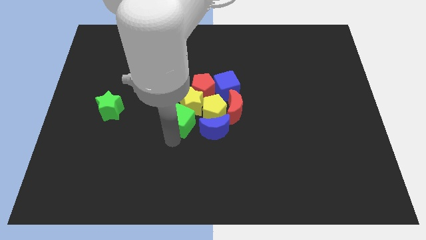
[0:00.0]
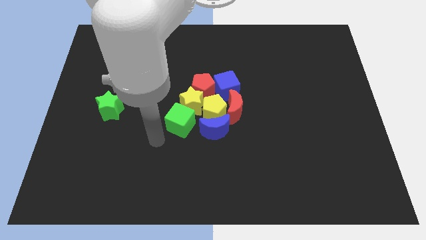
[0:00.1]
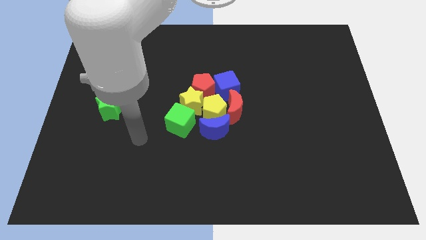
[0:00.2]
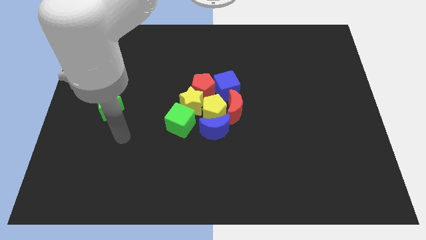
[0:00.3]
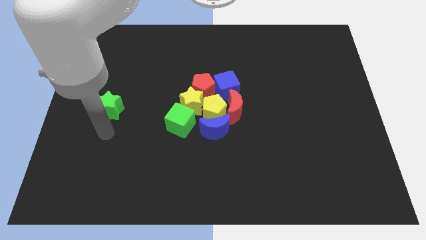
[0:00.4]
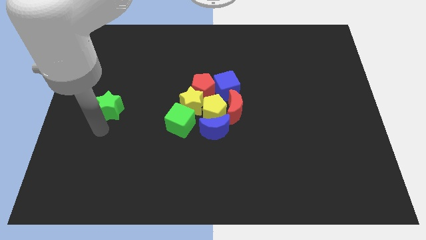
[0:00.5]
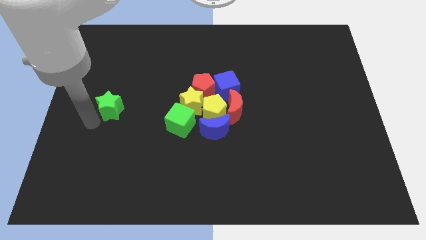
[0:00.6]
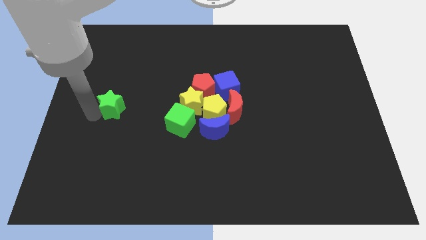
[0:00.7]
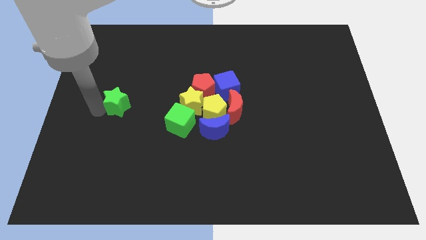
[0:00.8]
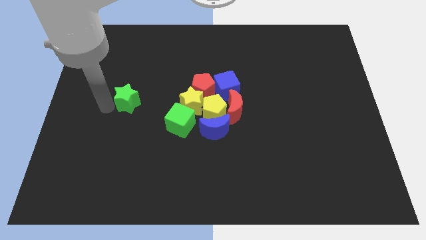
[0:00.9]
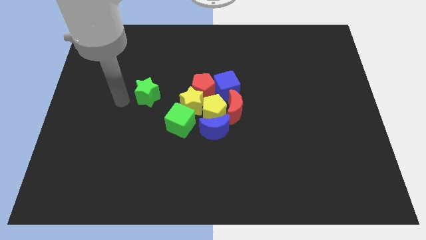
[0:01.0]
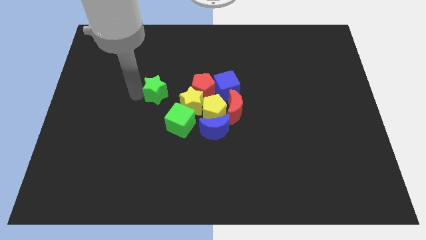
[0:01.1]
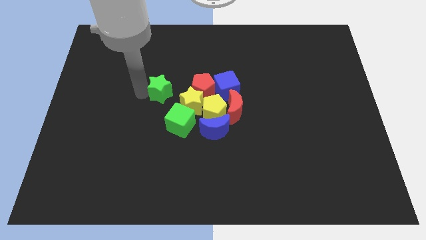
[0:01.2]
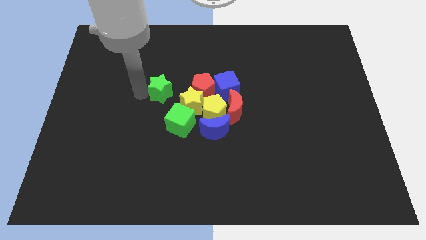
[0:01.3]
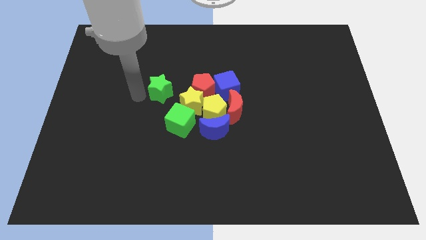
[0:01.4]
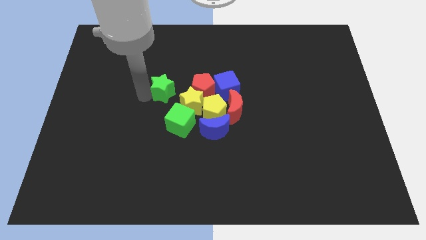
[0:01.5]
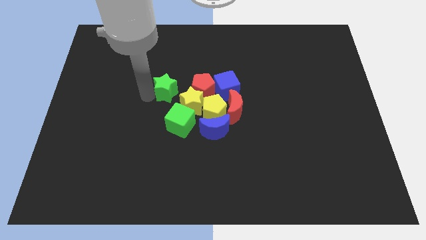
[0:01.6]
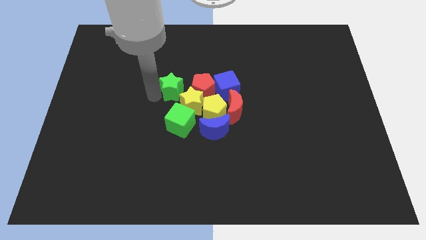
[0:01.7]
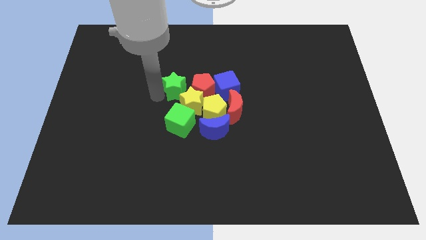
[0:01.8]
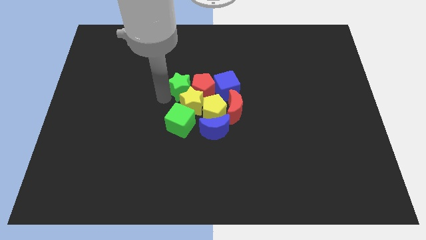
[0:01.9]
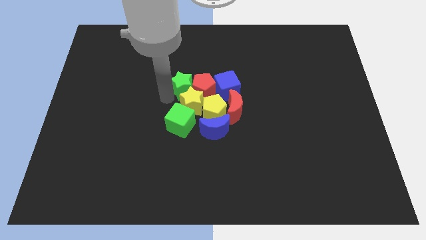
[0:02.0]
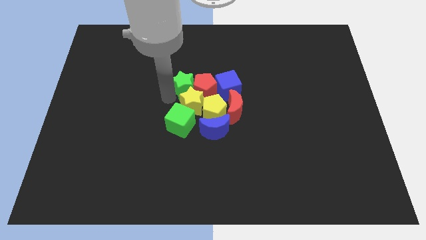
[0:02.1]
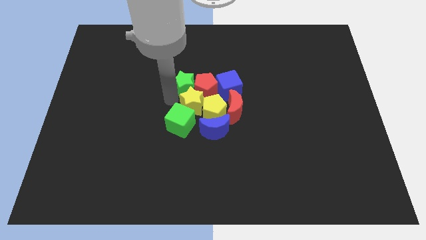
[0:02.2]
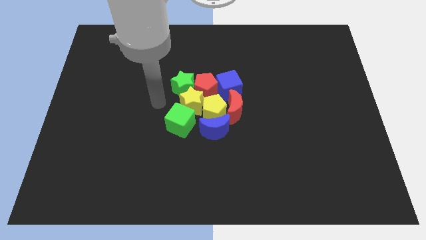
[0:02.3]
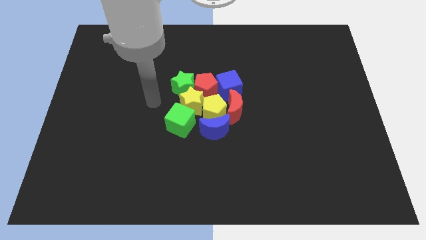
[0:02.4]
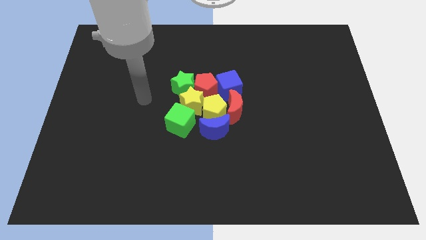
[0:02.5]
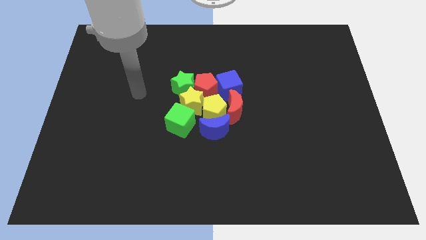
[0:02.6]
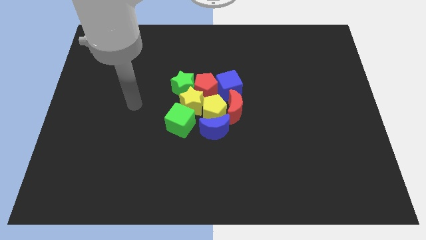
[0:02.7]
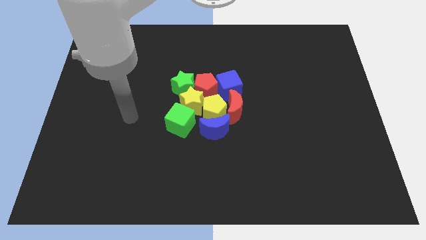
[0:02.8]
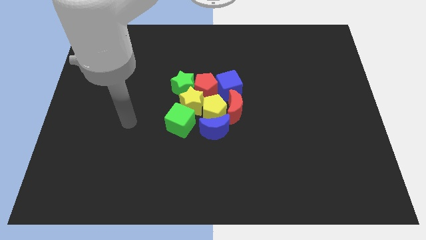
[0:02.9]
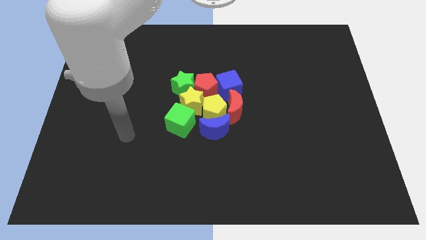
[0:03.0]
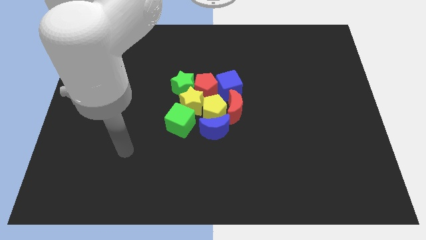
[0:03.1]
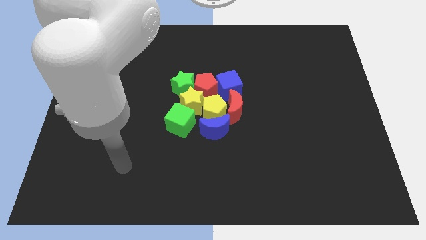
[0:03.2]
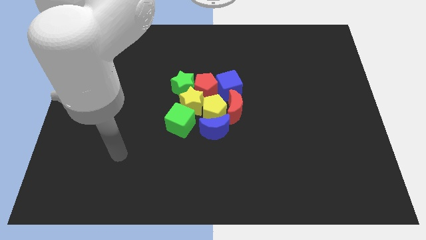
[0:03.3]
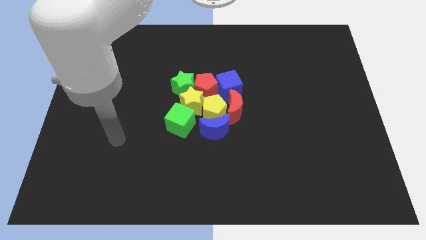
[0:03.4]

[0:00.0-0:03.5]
place the green star left to the red pentagon

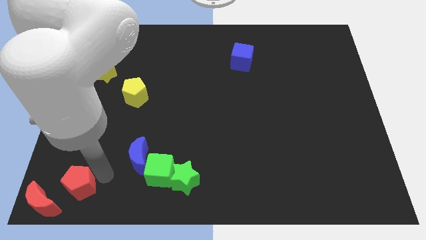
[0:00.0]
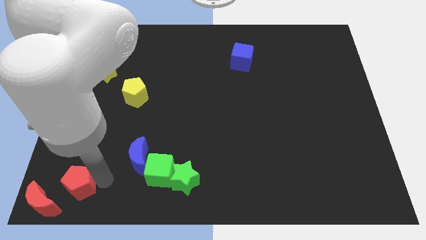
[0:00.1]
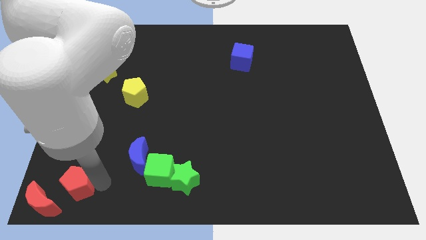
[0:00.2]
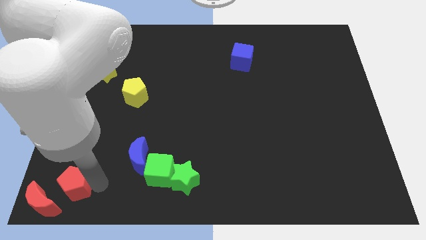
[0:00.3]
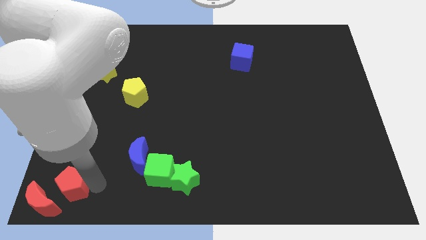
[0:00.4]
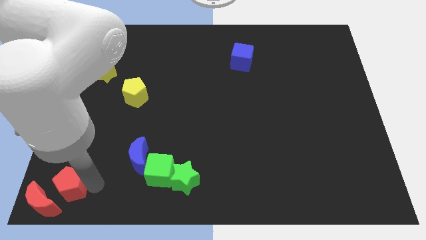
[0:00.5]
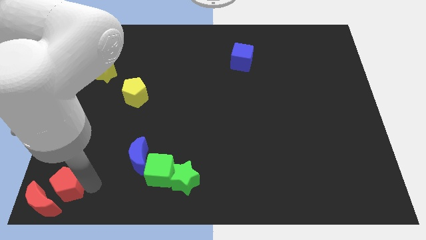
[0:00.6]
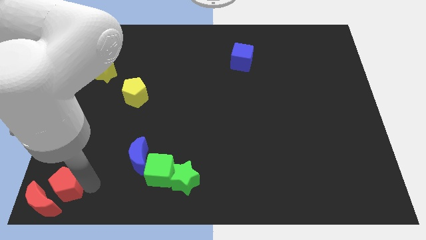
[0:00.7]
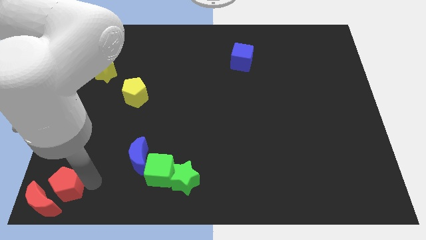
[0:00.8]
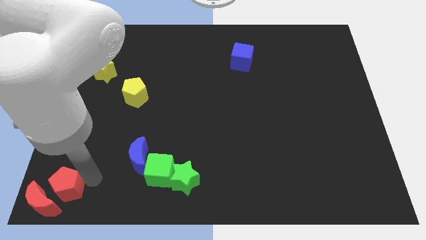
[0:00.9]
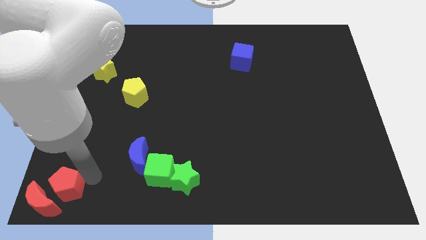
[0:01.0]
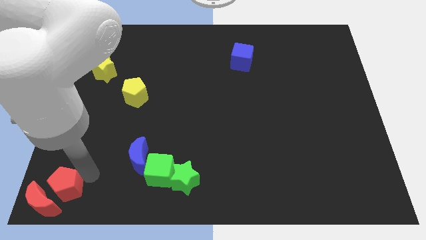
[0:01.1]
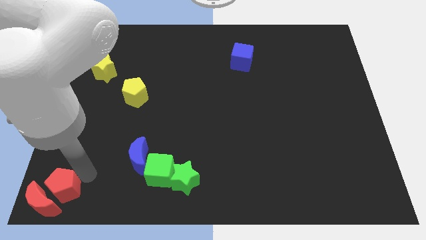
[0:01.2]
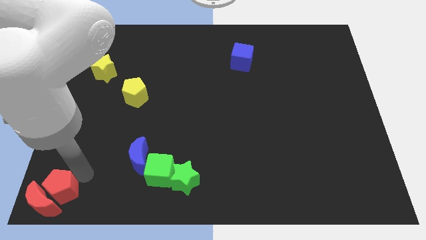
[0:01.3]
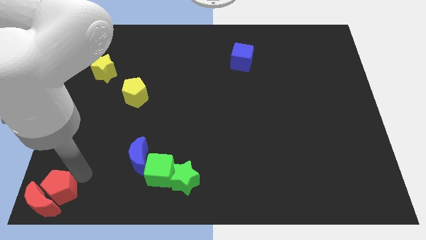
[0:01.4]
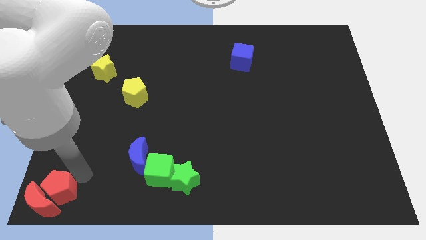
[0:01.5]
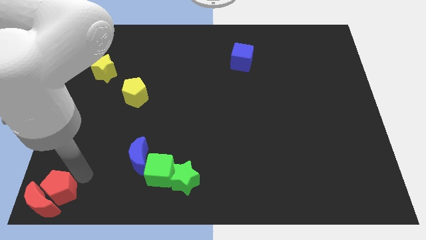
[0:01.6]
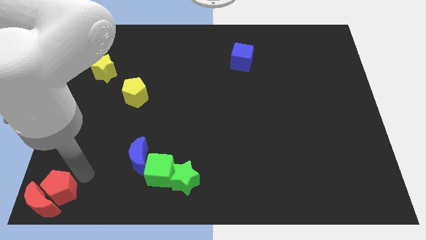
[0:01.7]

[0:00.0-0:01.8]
slide the red pentagon into red moon

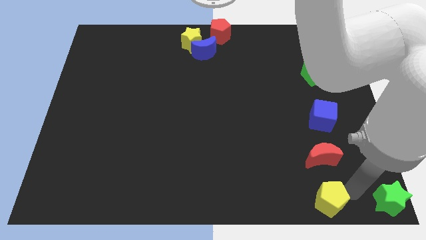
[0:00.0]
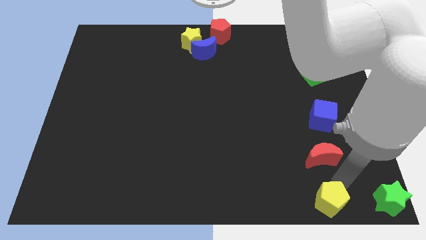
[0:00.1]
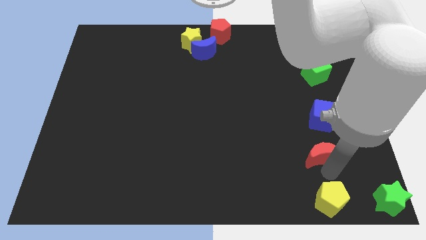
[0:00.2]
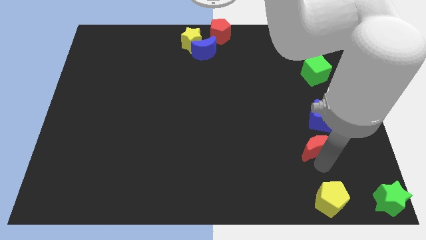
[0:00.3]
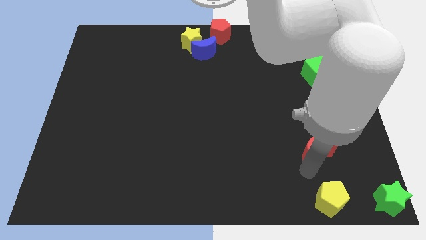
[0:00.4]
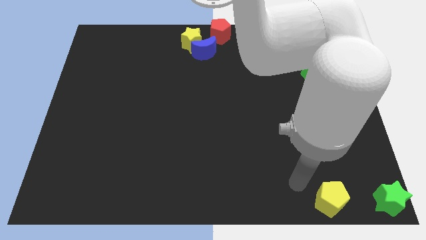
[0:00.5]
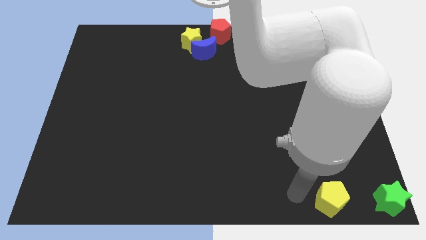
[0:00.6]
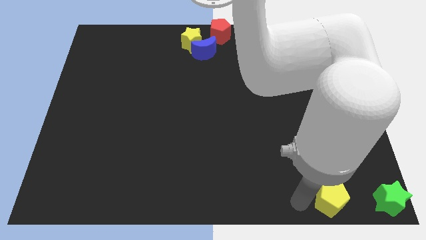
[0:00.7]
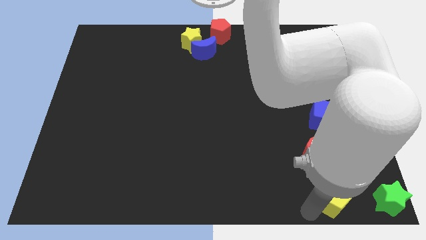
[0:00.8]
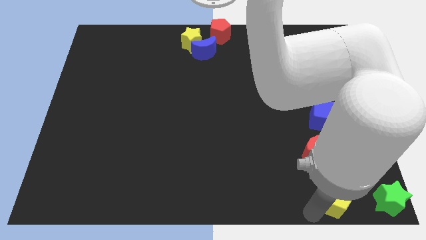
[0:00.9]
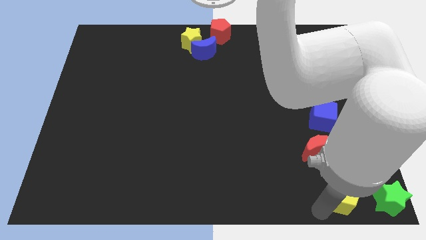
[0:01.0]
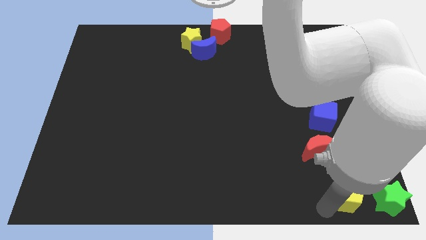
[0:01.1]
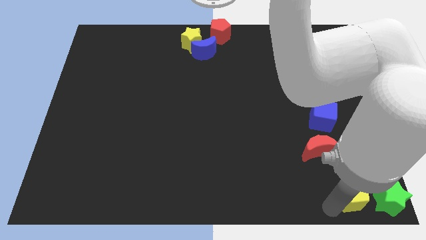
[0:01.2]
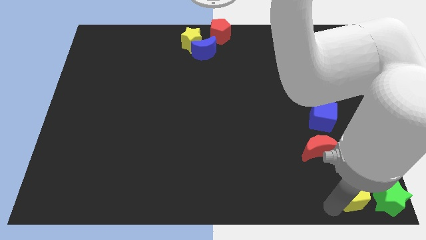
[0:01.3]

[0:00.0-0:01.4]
slightly move the yellow pentagon towards the right

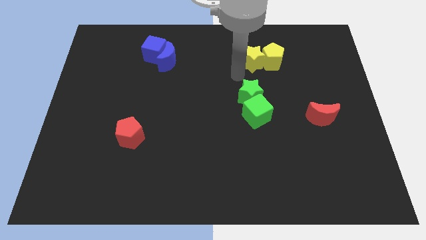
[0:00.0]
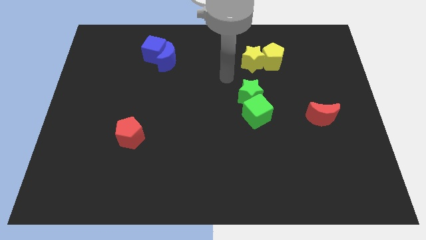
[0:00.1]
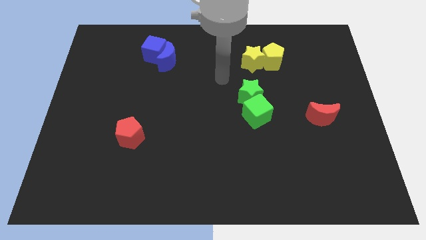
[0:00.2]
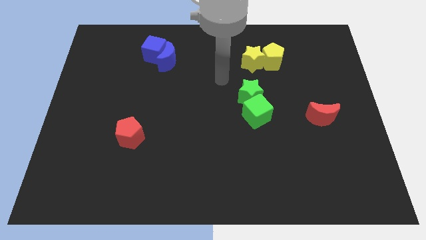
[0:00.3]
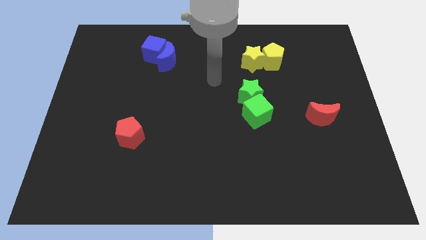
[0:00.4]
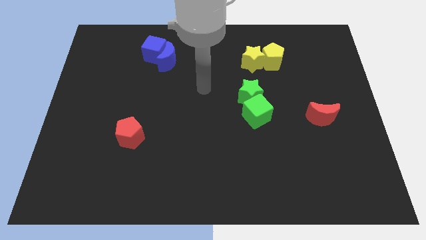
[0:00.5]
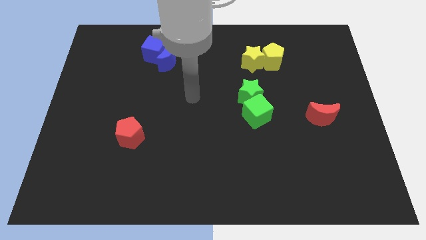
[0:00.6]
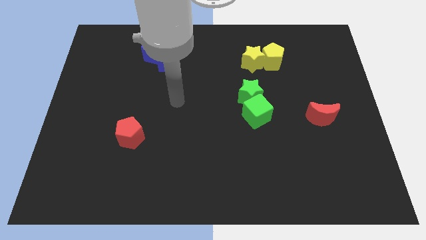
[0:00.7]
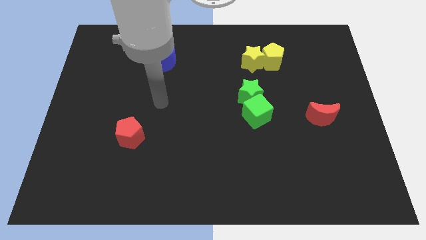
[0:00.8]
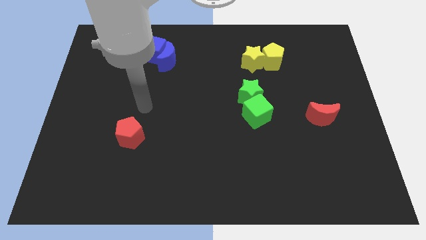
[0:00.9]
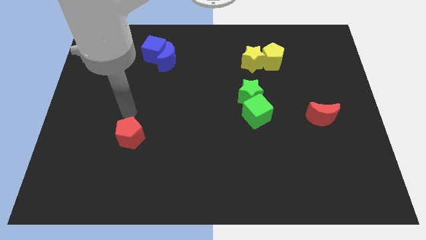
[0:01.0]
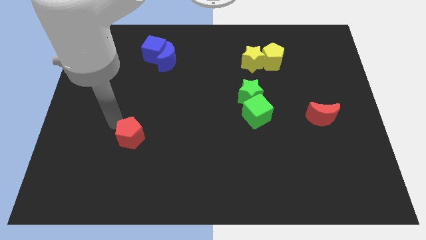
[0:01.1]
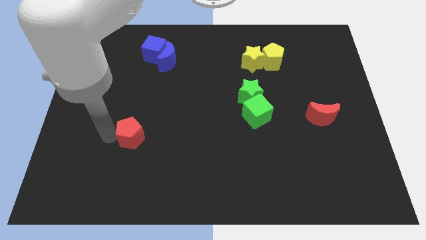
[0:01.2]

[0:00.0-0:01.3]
point your arm at the left side of the red pentagon

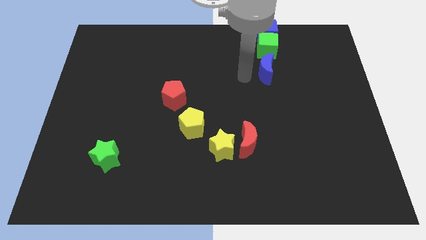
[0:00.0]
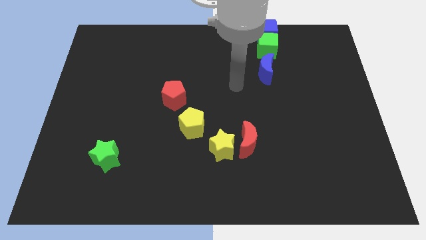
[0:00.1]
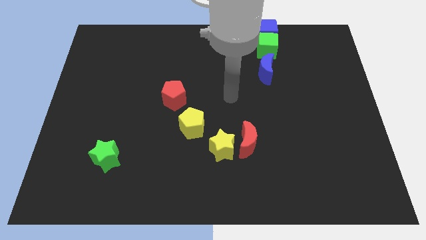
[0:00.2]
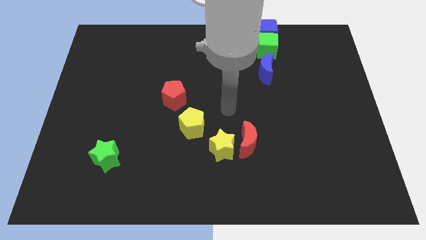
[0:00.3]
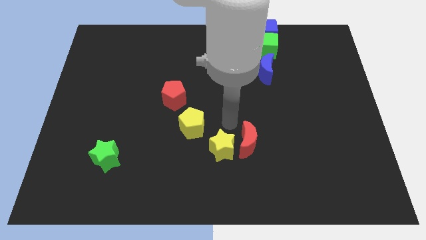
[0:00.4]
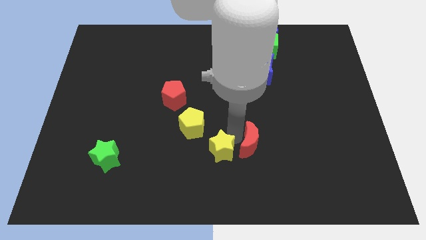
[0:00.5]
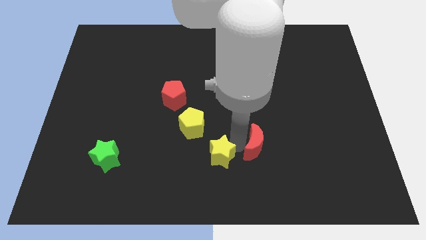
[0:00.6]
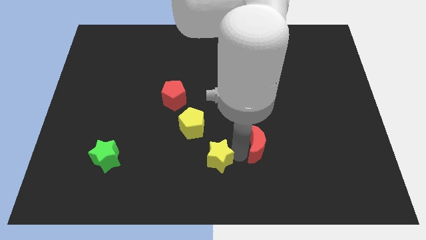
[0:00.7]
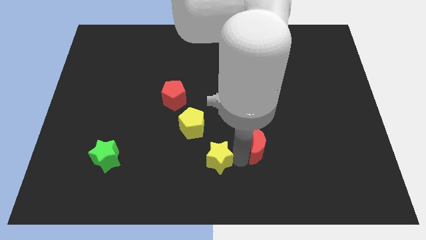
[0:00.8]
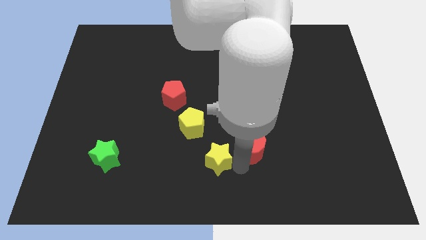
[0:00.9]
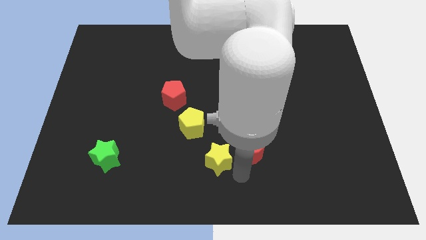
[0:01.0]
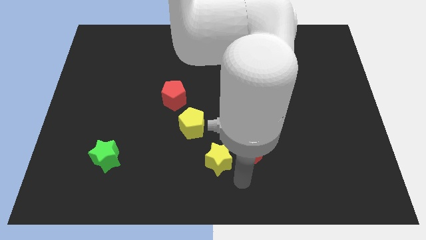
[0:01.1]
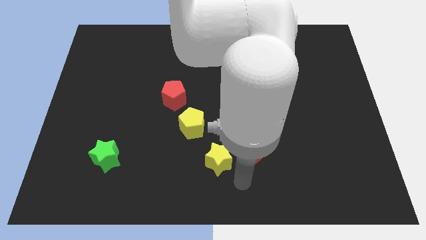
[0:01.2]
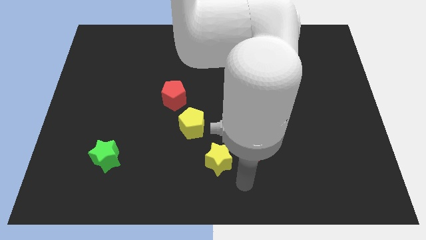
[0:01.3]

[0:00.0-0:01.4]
separate the yellow star and the red moon
